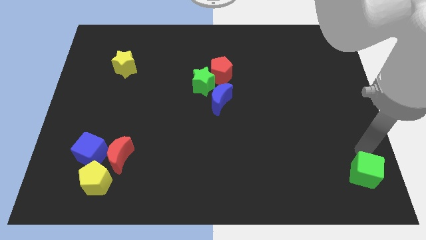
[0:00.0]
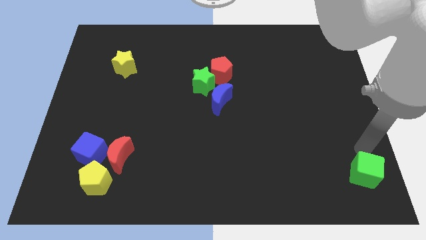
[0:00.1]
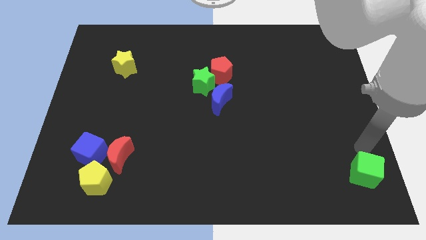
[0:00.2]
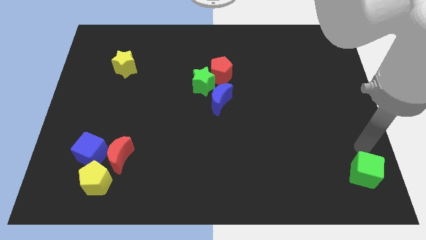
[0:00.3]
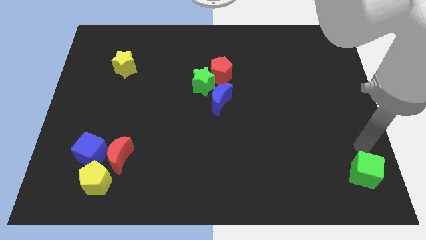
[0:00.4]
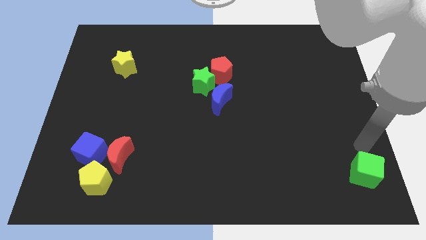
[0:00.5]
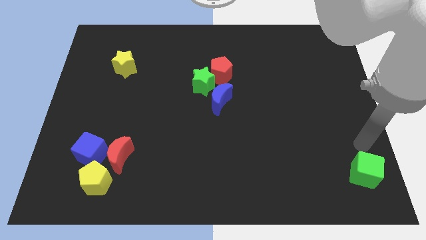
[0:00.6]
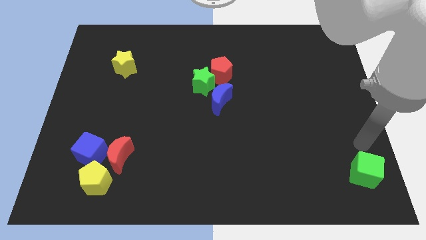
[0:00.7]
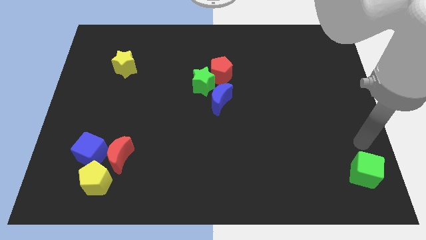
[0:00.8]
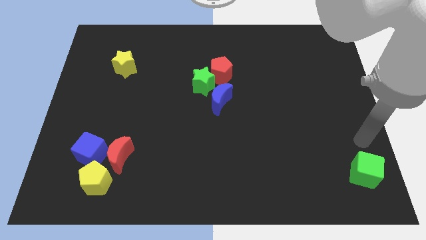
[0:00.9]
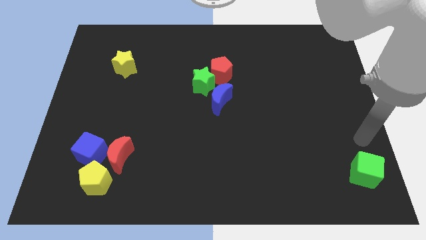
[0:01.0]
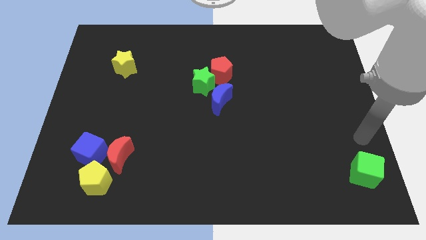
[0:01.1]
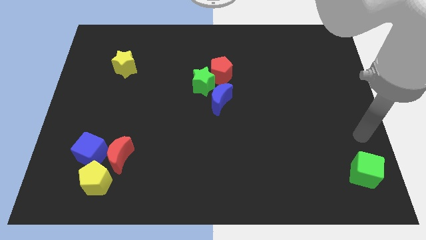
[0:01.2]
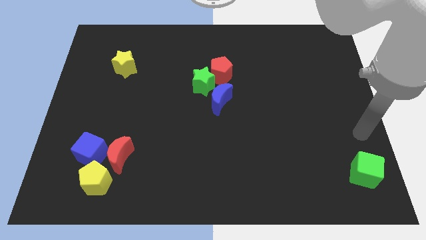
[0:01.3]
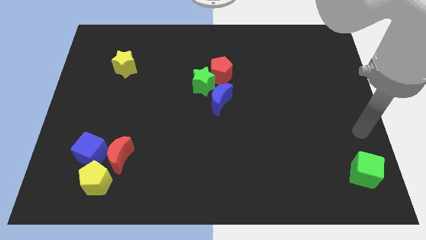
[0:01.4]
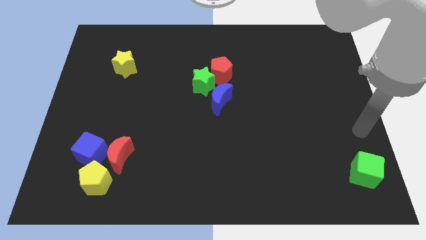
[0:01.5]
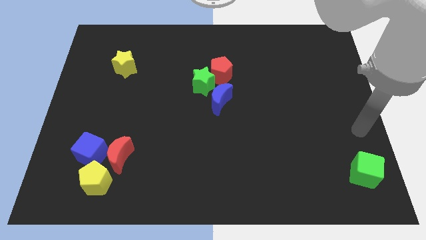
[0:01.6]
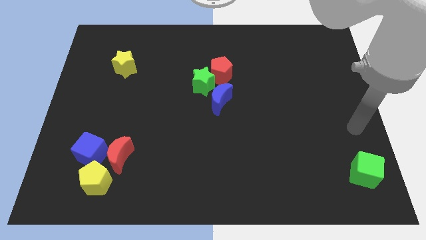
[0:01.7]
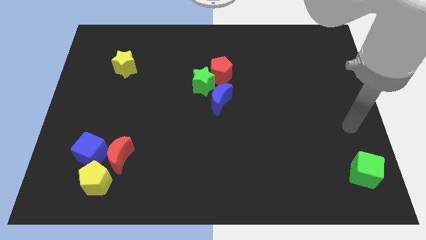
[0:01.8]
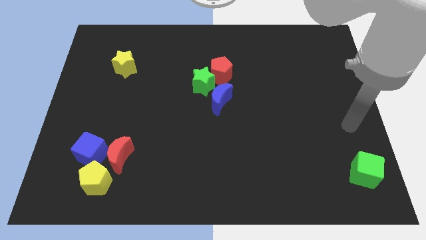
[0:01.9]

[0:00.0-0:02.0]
move your arm away from green cube

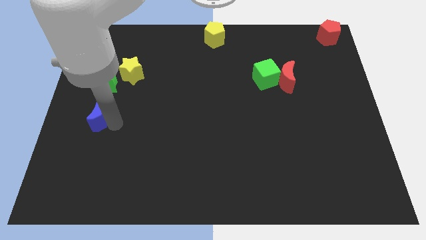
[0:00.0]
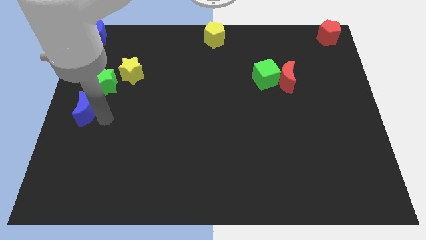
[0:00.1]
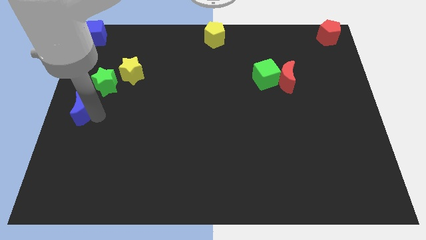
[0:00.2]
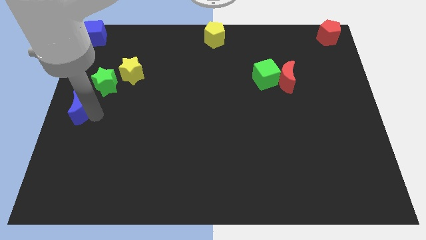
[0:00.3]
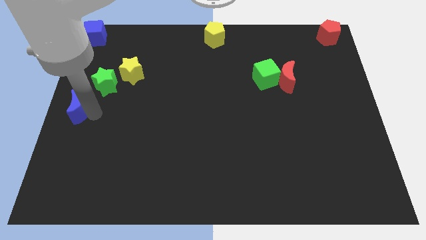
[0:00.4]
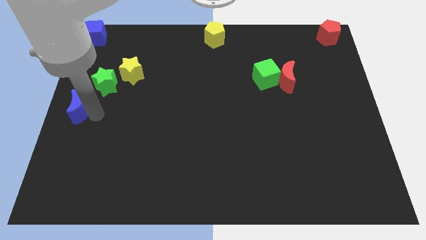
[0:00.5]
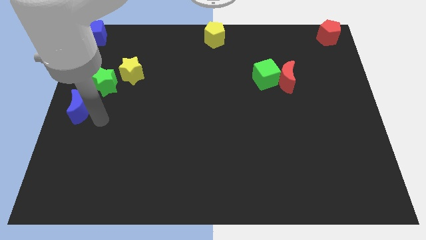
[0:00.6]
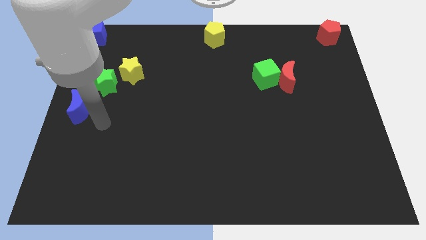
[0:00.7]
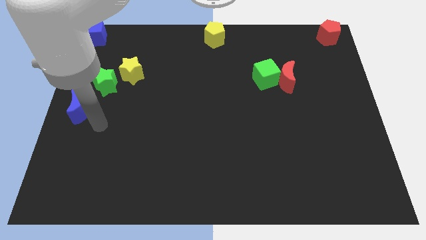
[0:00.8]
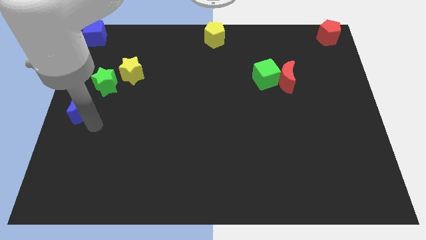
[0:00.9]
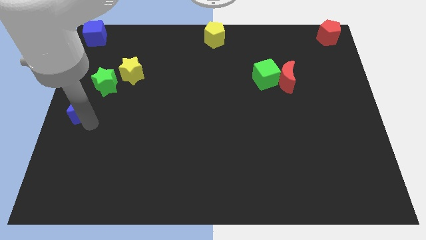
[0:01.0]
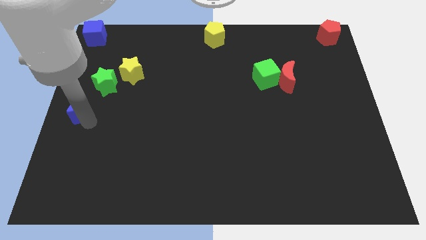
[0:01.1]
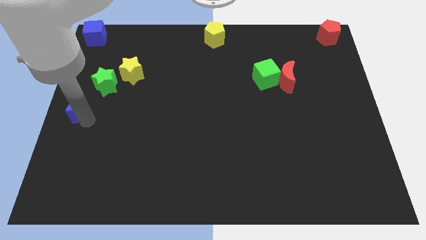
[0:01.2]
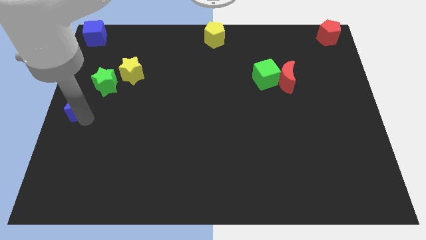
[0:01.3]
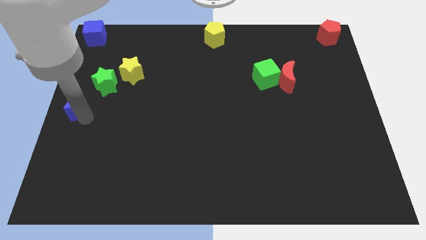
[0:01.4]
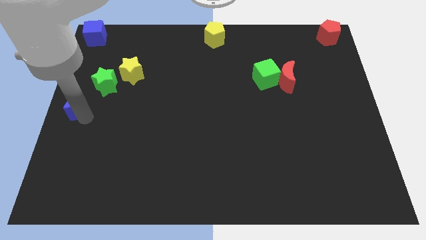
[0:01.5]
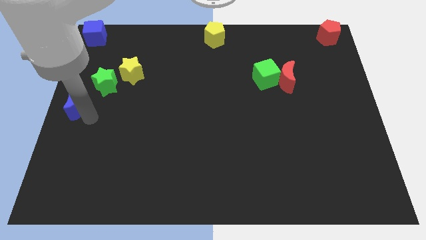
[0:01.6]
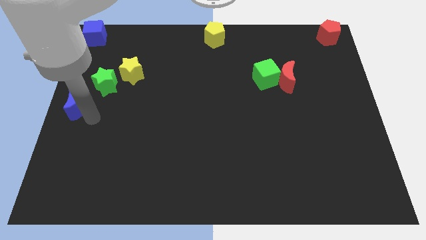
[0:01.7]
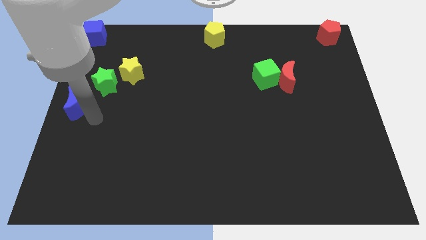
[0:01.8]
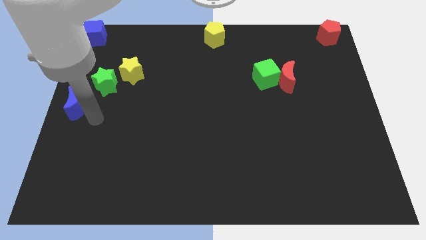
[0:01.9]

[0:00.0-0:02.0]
place the blue crescent at the left center of the board

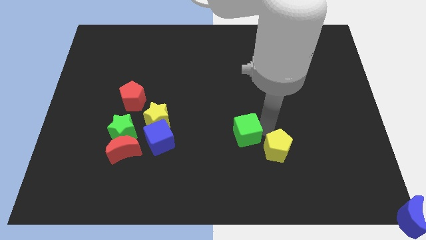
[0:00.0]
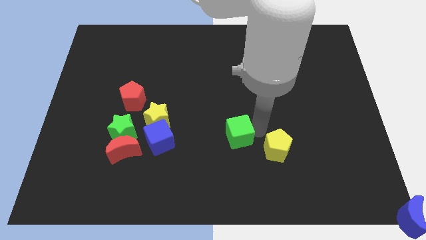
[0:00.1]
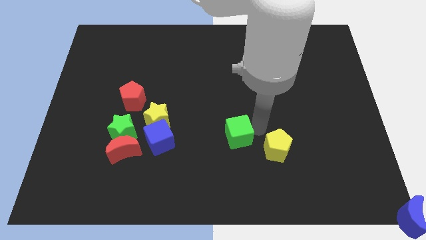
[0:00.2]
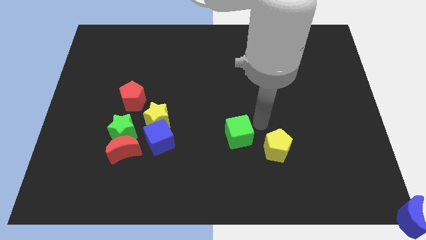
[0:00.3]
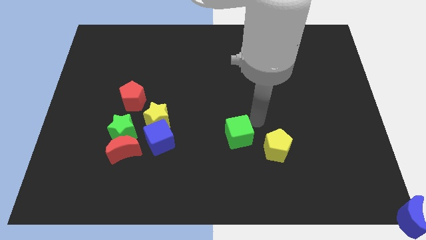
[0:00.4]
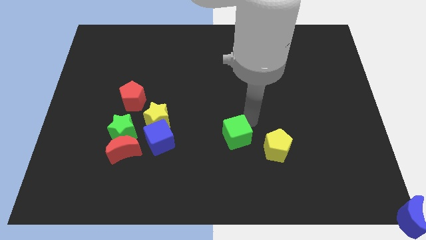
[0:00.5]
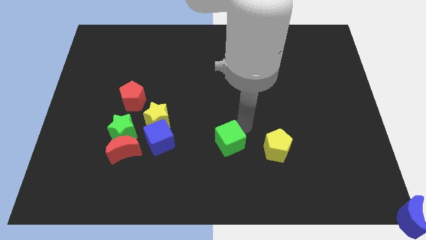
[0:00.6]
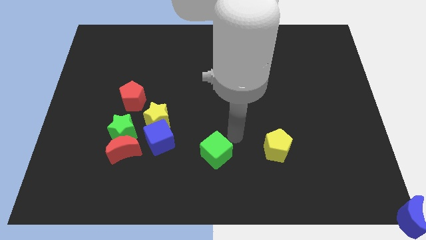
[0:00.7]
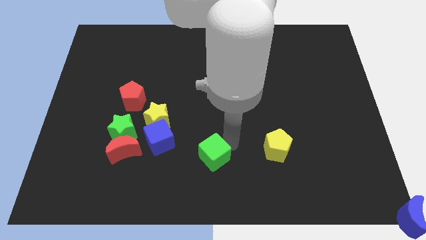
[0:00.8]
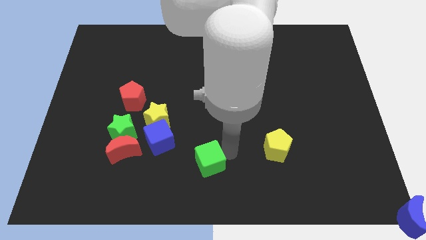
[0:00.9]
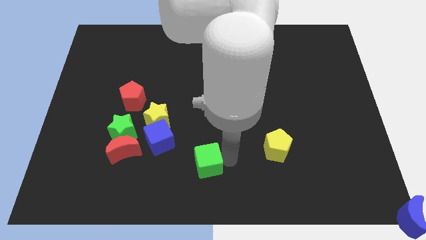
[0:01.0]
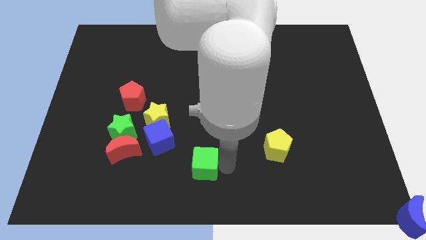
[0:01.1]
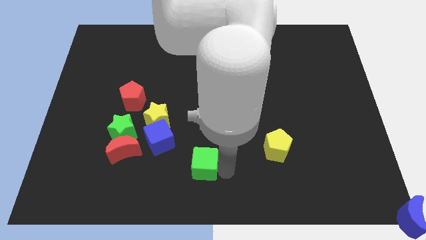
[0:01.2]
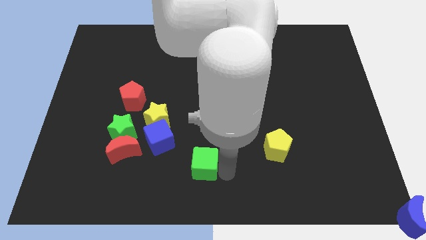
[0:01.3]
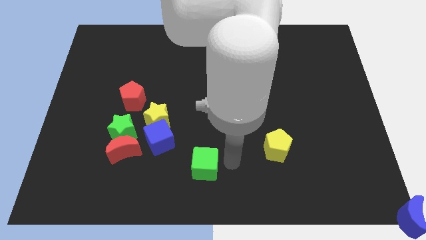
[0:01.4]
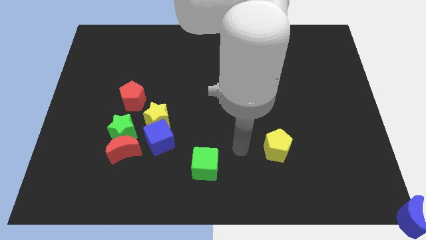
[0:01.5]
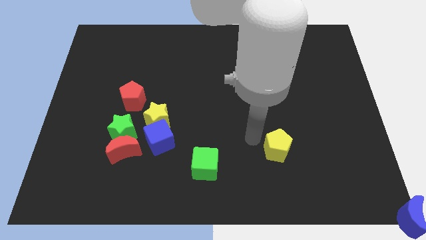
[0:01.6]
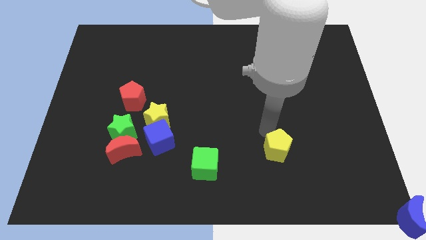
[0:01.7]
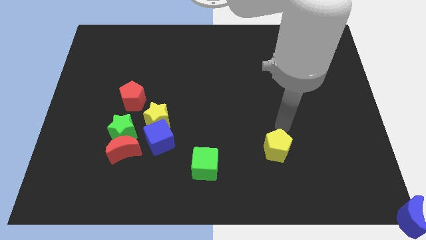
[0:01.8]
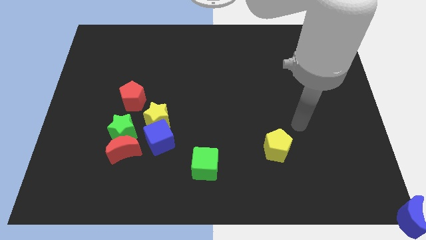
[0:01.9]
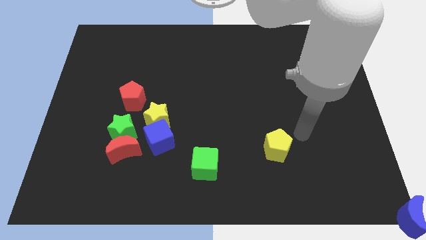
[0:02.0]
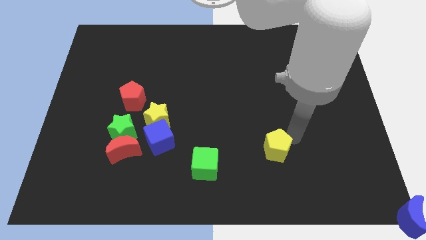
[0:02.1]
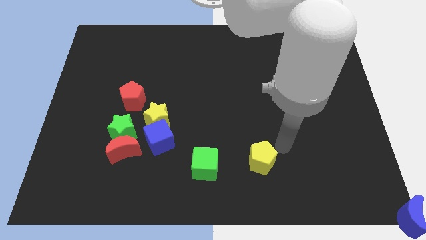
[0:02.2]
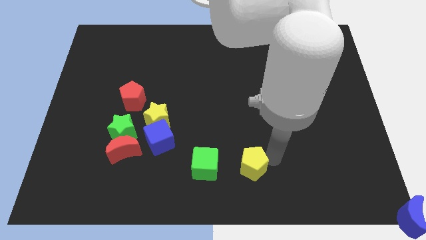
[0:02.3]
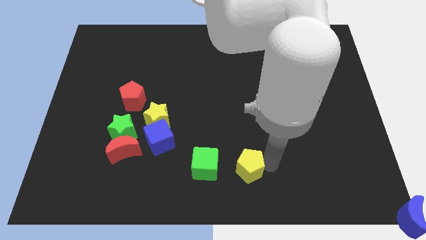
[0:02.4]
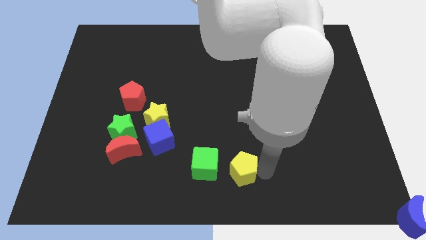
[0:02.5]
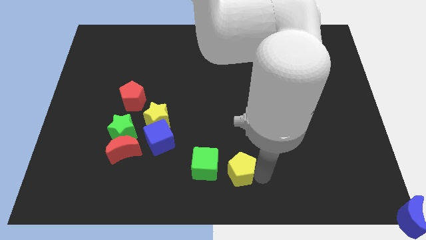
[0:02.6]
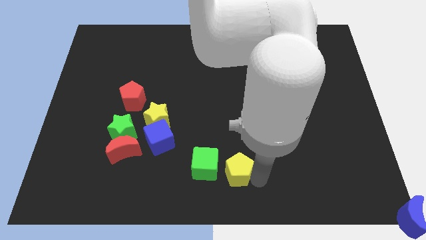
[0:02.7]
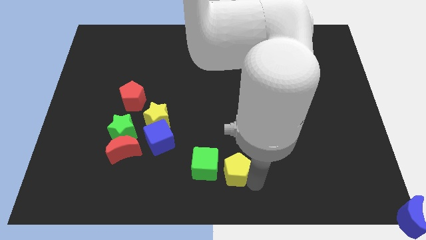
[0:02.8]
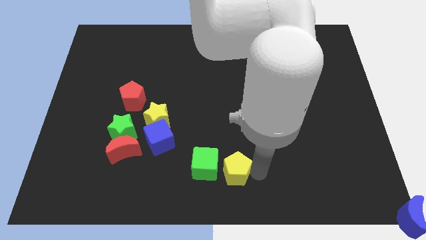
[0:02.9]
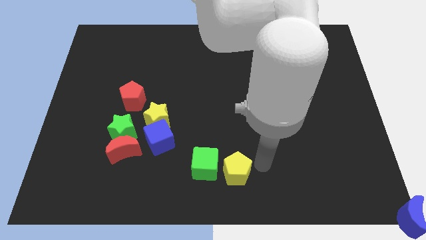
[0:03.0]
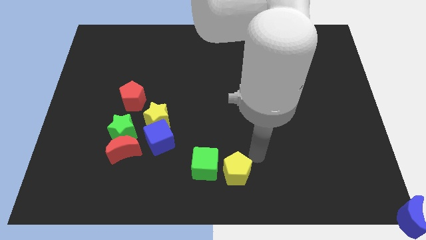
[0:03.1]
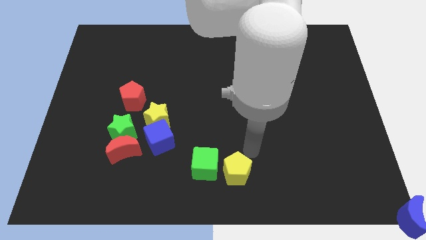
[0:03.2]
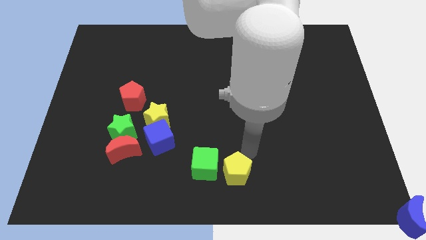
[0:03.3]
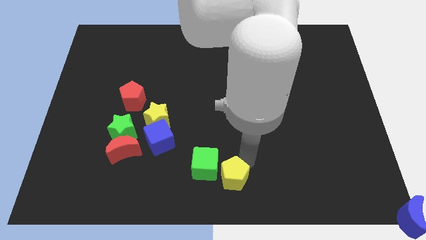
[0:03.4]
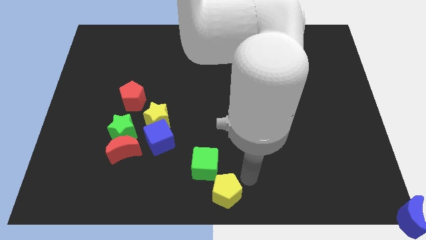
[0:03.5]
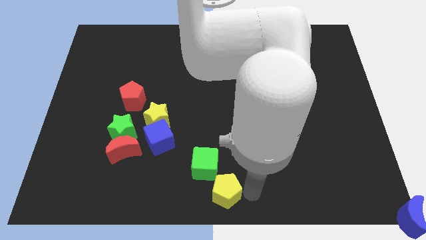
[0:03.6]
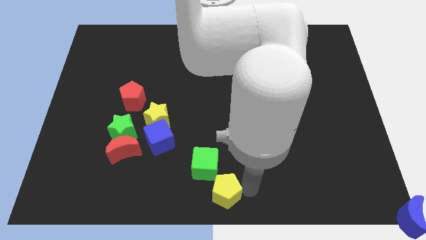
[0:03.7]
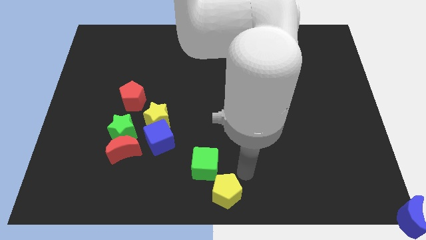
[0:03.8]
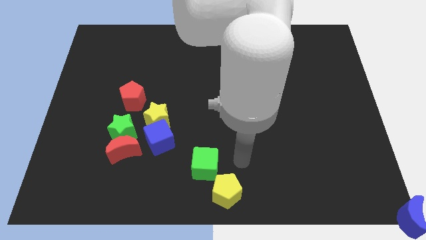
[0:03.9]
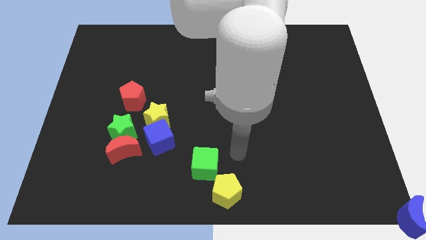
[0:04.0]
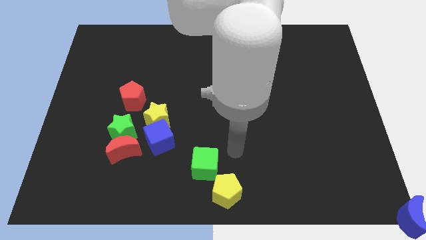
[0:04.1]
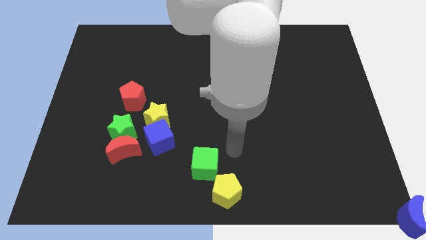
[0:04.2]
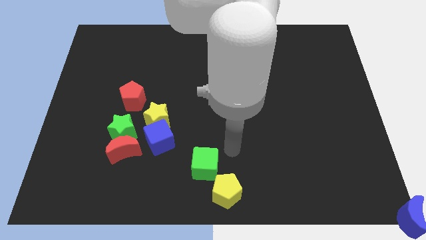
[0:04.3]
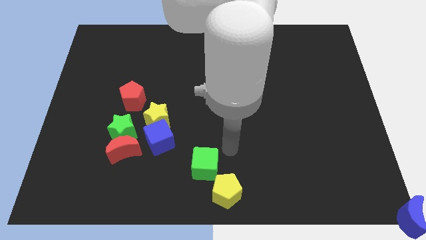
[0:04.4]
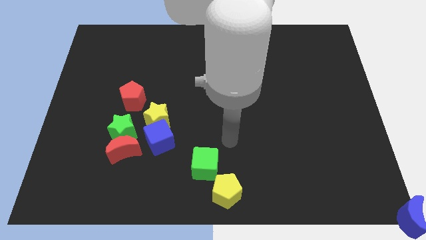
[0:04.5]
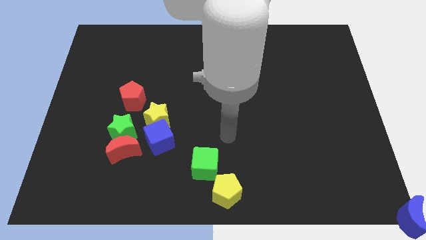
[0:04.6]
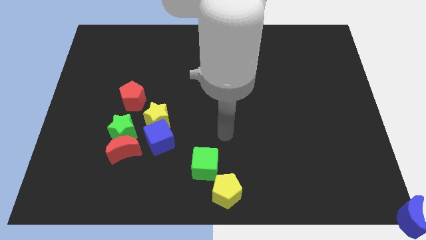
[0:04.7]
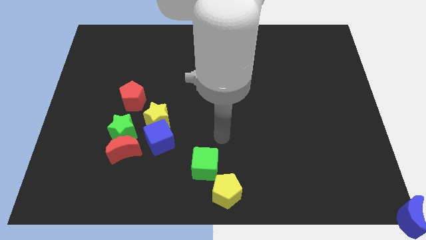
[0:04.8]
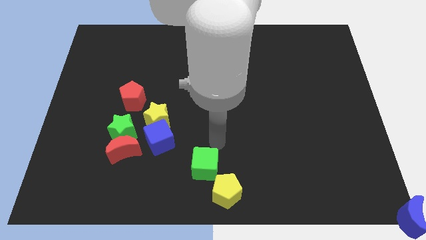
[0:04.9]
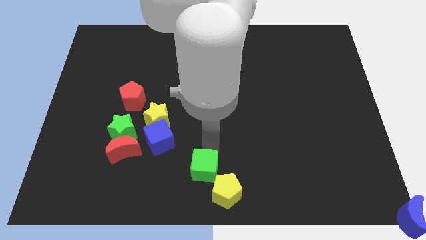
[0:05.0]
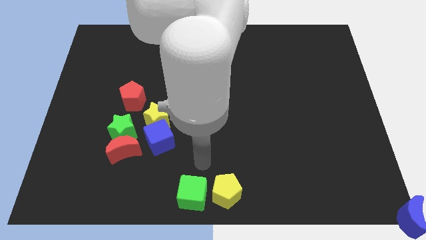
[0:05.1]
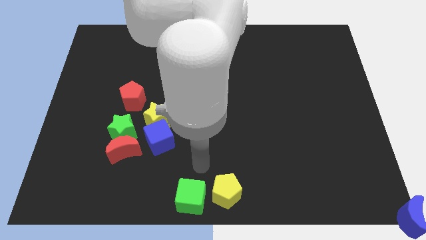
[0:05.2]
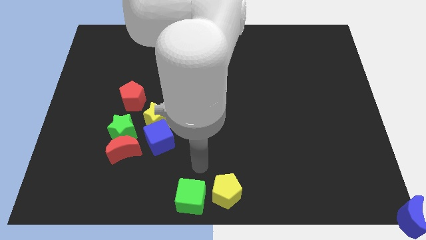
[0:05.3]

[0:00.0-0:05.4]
push the green cube and yellow pentagon to the bottom center of the board
